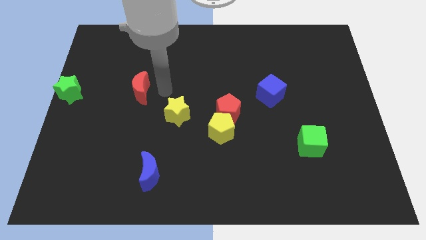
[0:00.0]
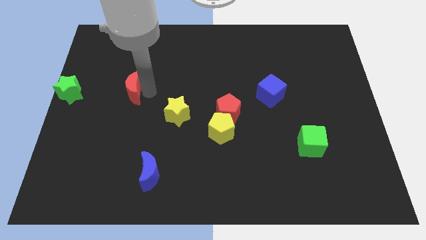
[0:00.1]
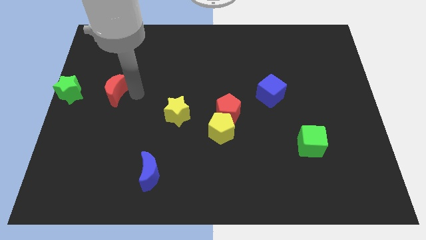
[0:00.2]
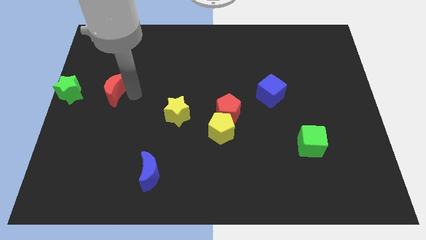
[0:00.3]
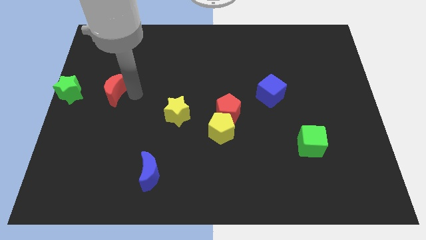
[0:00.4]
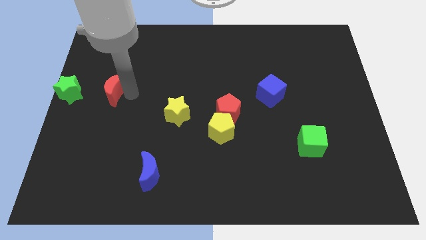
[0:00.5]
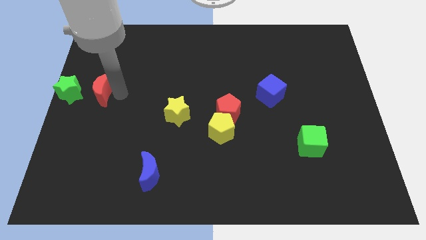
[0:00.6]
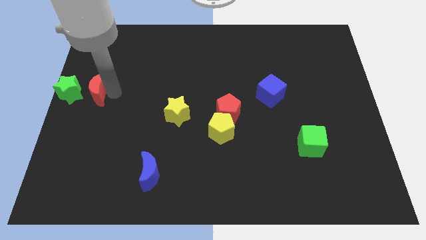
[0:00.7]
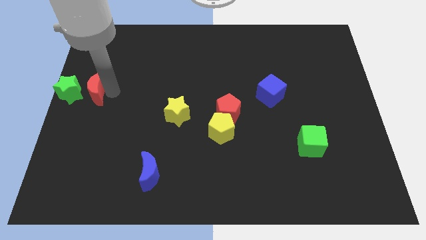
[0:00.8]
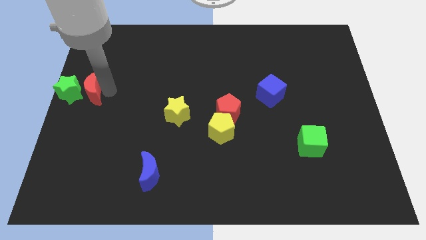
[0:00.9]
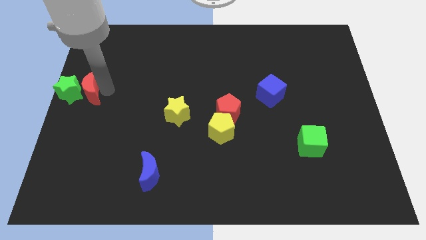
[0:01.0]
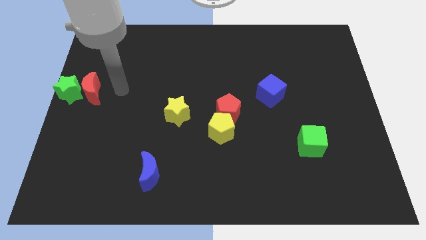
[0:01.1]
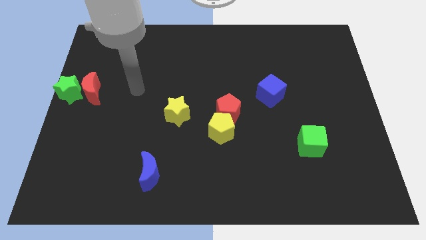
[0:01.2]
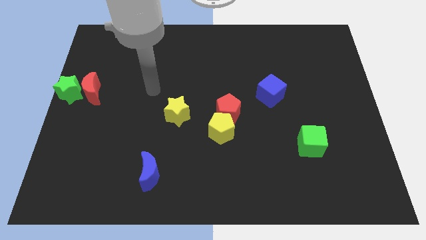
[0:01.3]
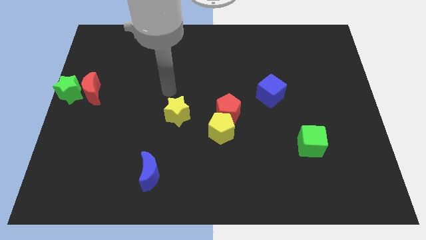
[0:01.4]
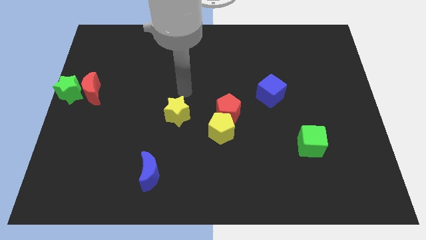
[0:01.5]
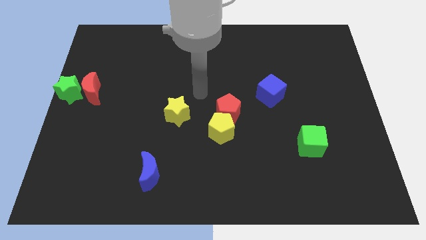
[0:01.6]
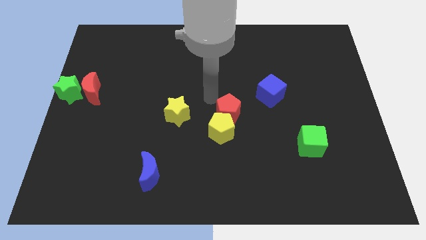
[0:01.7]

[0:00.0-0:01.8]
place the red moon to the right of green star

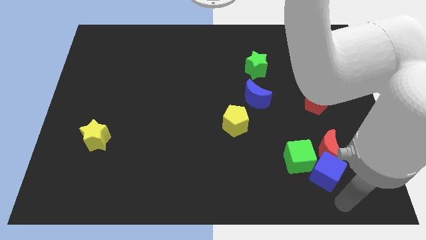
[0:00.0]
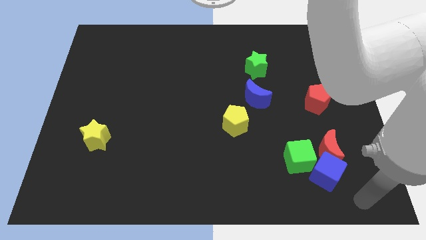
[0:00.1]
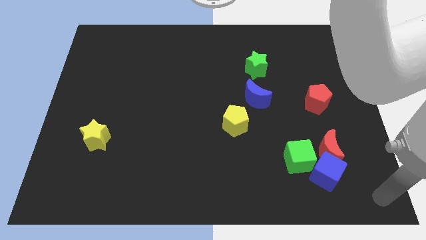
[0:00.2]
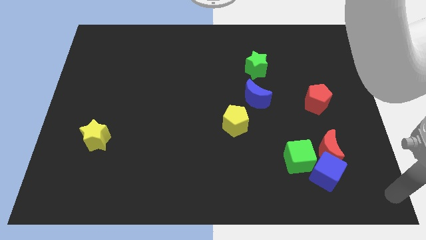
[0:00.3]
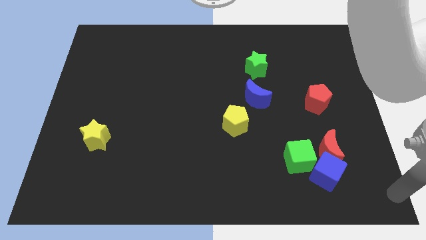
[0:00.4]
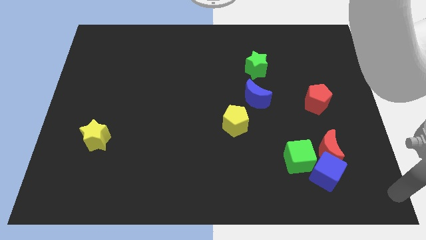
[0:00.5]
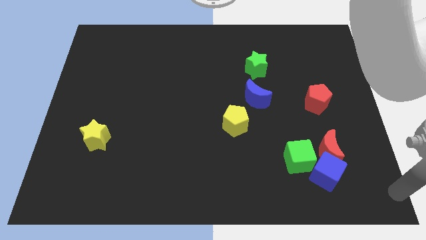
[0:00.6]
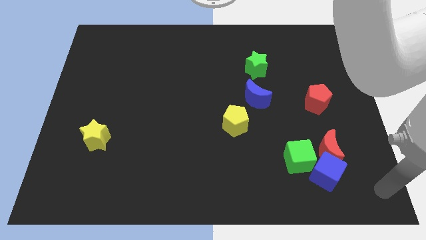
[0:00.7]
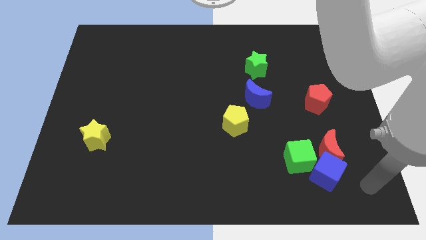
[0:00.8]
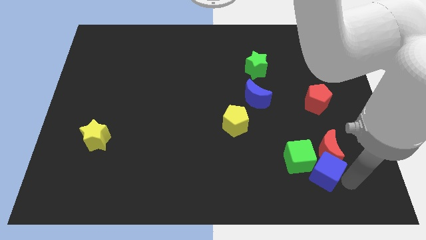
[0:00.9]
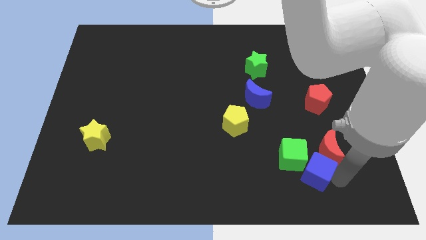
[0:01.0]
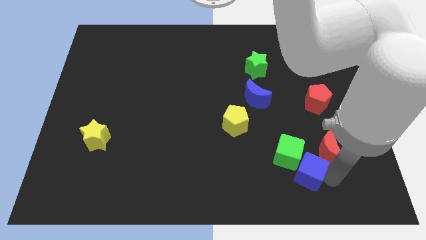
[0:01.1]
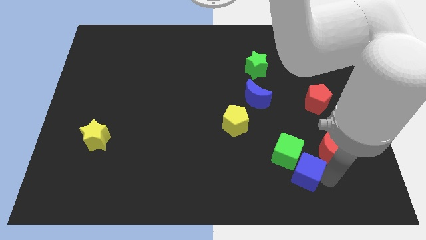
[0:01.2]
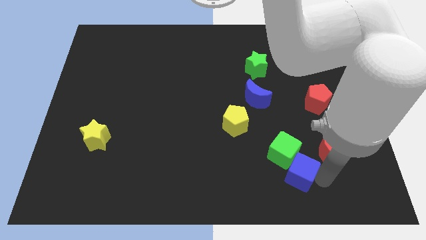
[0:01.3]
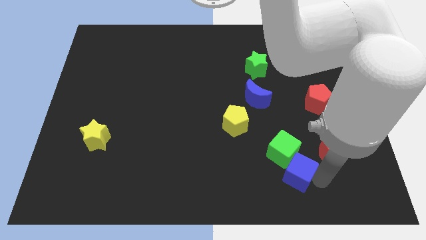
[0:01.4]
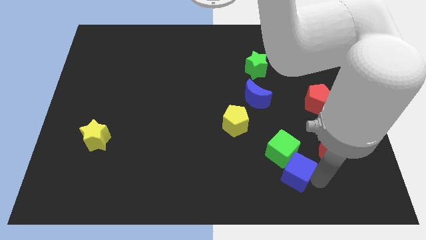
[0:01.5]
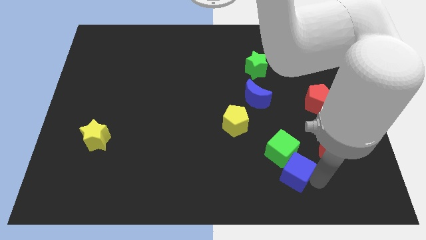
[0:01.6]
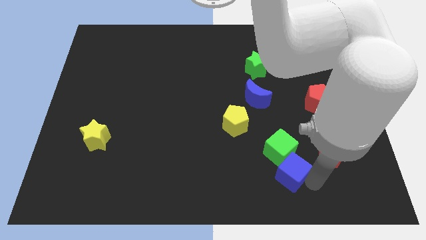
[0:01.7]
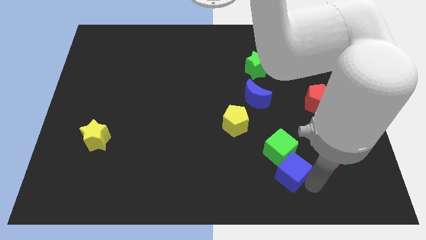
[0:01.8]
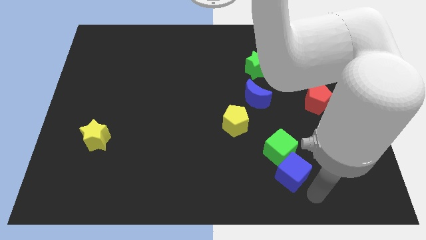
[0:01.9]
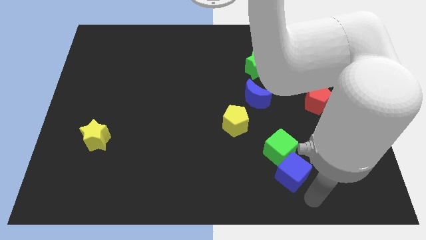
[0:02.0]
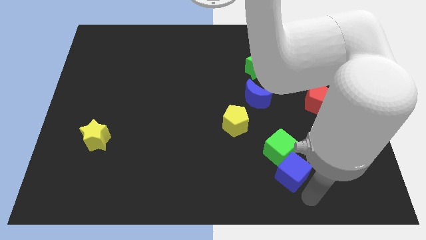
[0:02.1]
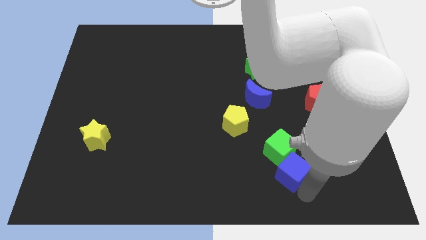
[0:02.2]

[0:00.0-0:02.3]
push the blue cube into the green cube

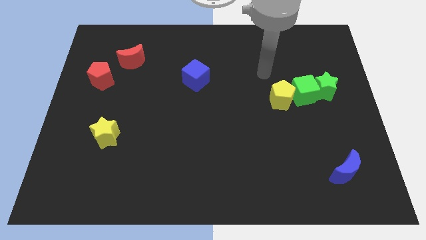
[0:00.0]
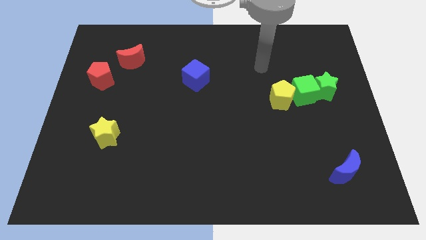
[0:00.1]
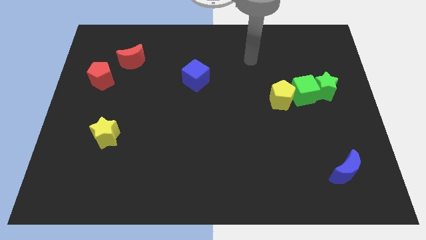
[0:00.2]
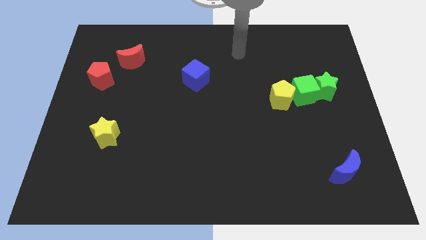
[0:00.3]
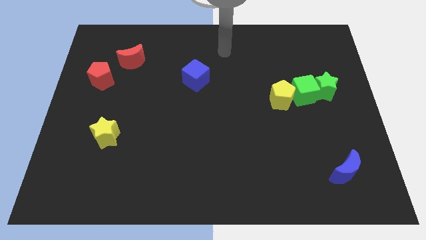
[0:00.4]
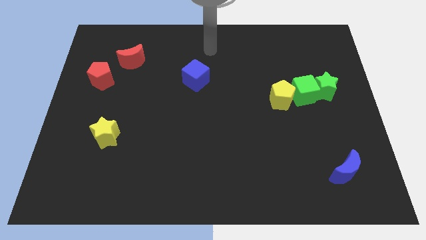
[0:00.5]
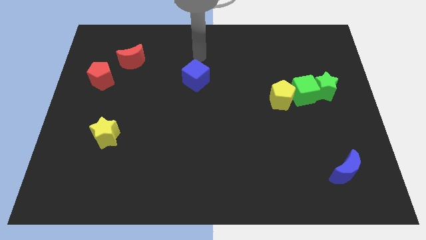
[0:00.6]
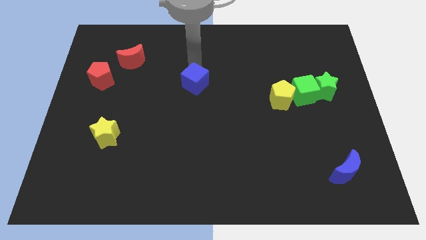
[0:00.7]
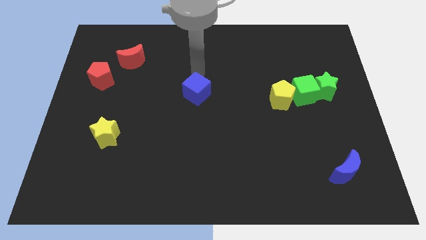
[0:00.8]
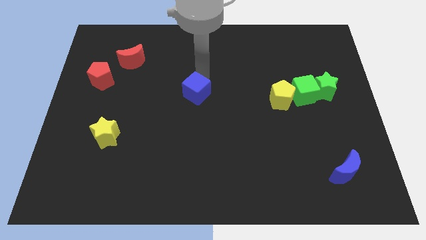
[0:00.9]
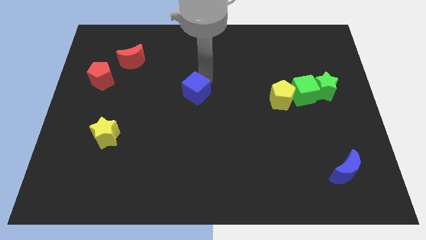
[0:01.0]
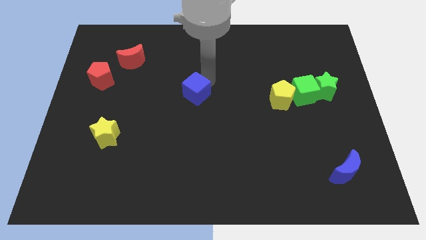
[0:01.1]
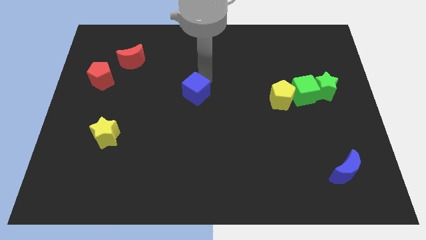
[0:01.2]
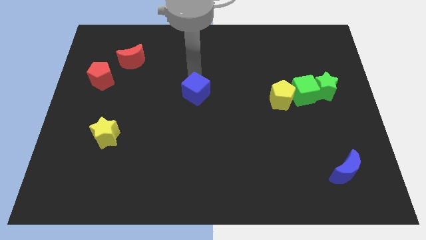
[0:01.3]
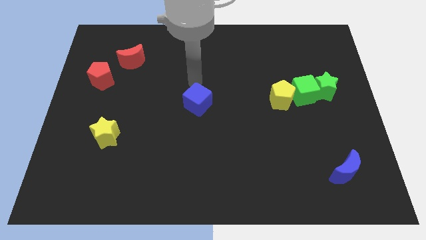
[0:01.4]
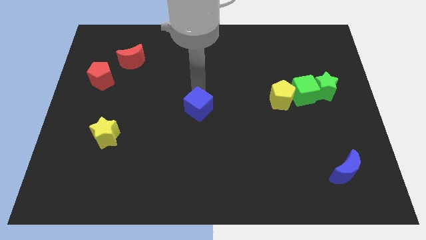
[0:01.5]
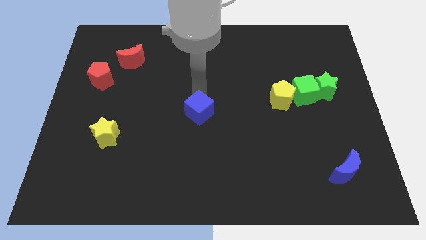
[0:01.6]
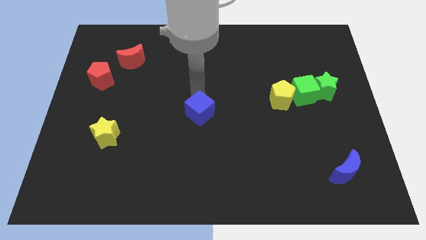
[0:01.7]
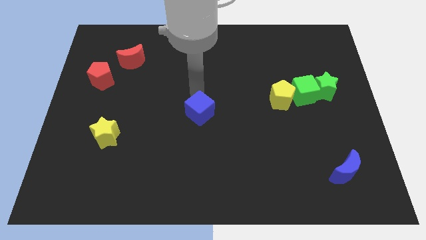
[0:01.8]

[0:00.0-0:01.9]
place the blue cube at the center of the board

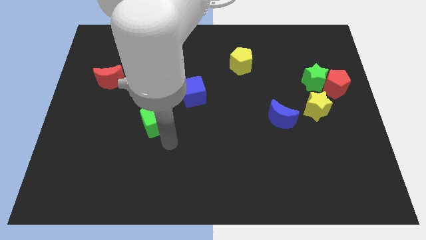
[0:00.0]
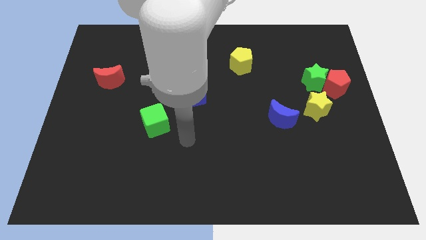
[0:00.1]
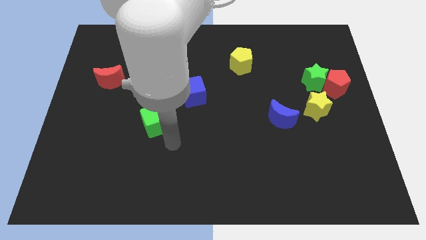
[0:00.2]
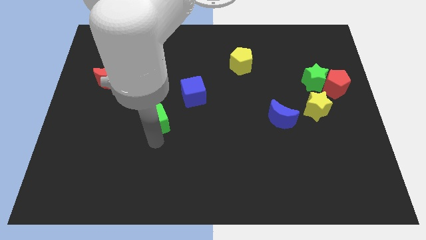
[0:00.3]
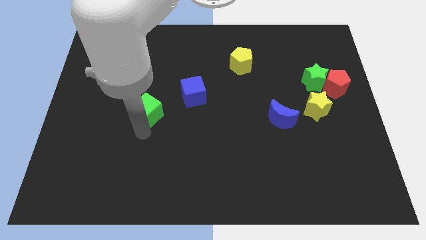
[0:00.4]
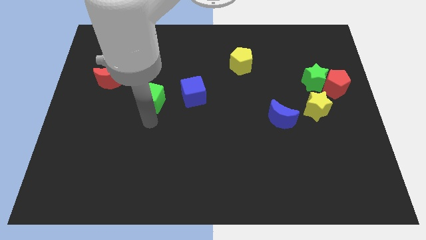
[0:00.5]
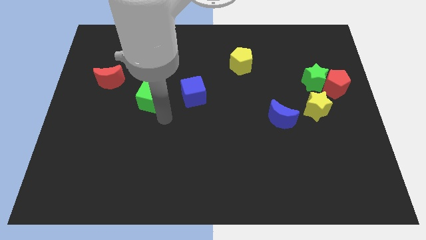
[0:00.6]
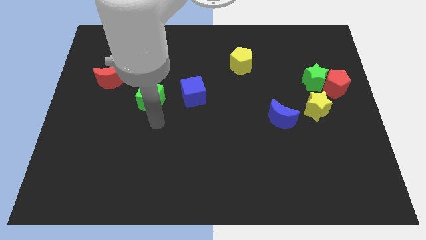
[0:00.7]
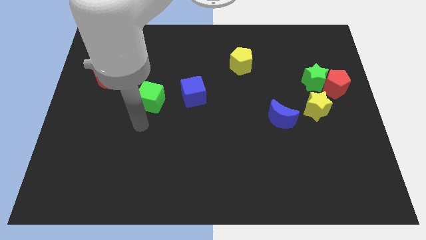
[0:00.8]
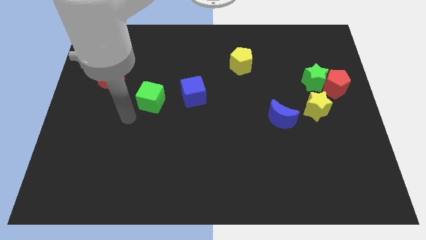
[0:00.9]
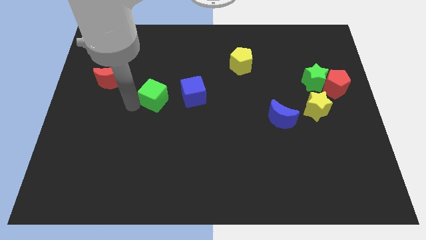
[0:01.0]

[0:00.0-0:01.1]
put the green cube left to the blue cube

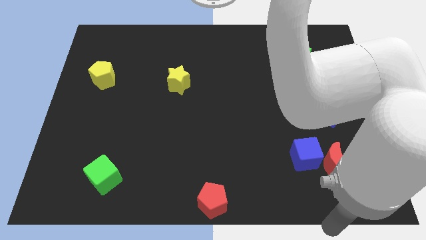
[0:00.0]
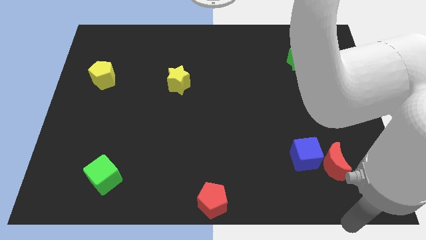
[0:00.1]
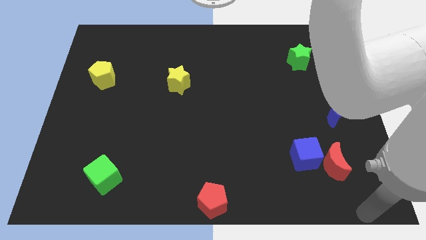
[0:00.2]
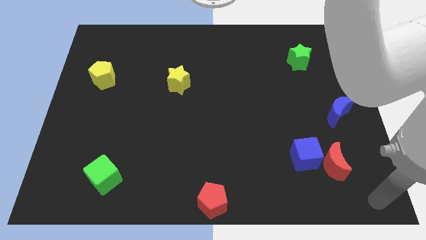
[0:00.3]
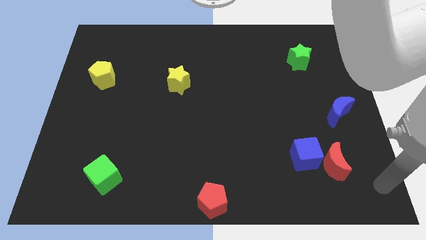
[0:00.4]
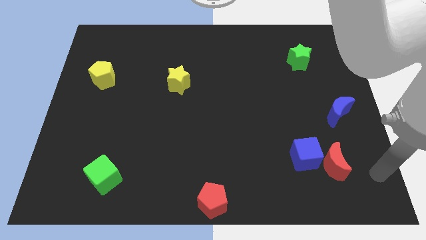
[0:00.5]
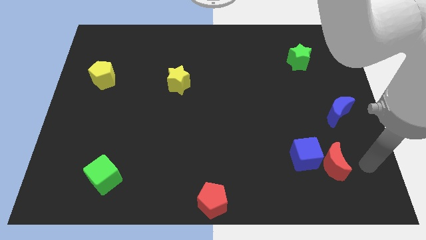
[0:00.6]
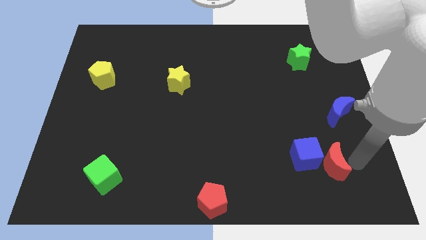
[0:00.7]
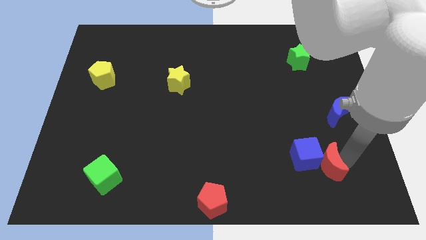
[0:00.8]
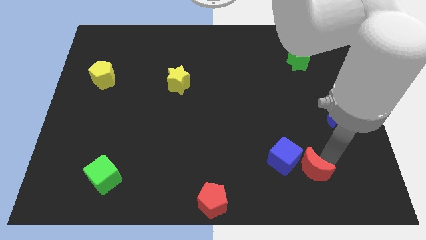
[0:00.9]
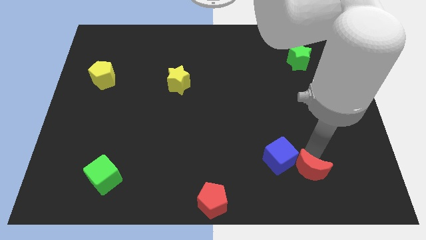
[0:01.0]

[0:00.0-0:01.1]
push the red crescent and blue cube towards the left side

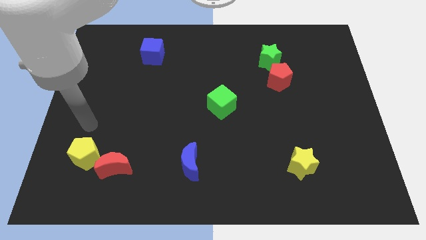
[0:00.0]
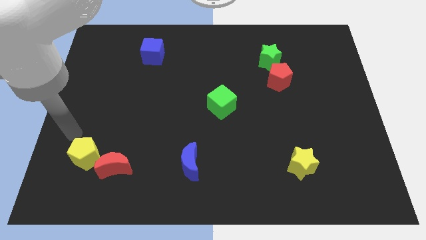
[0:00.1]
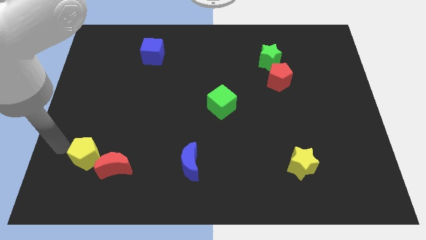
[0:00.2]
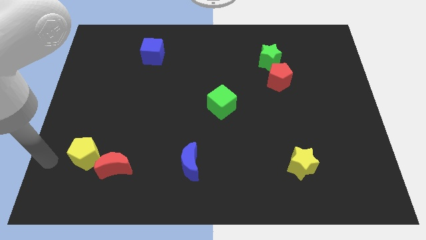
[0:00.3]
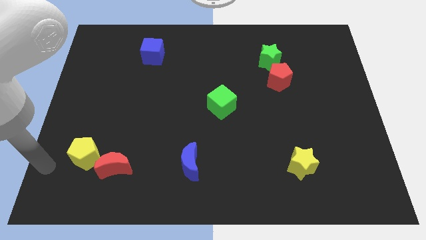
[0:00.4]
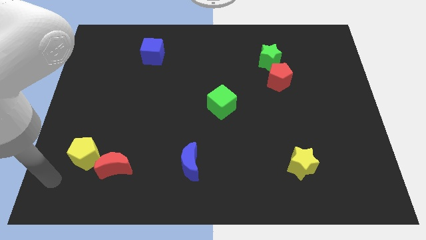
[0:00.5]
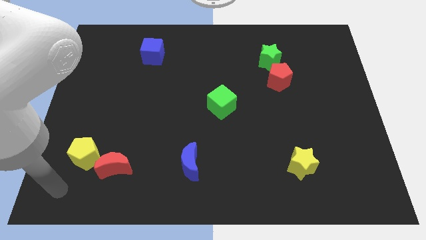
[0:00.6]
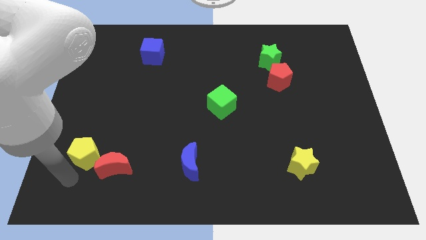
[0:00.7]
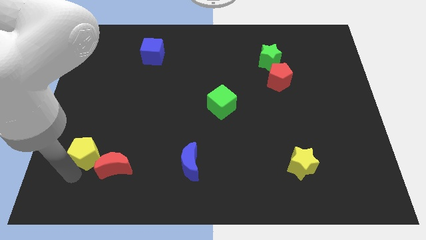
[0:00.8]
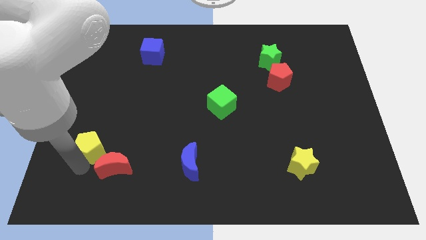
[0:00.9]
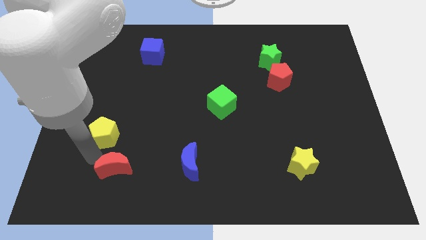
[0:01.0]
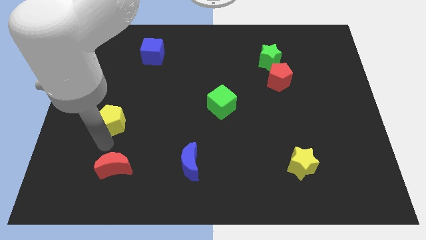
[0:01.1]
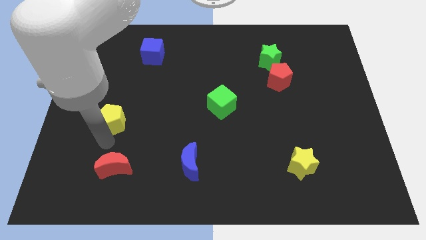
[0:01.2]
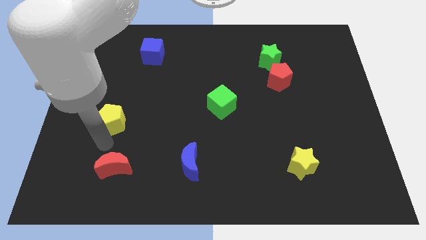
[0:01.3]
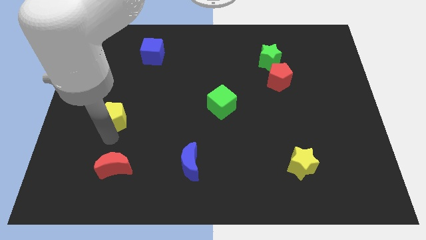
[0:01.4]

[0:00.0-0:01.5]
move the yellow pentagon away from the left side of the red crescent
